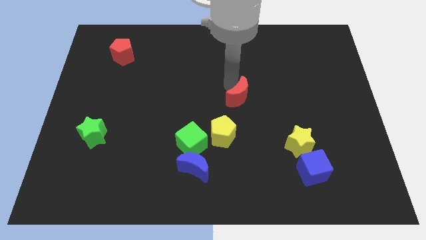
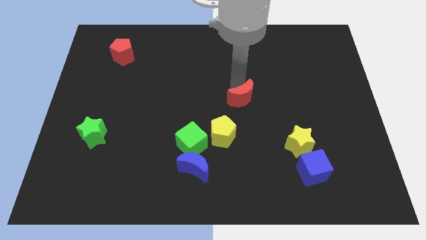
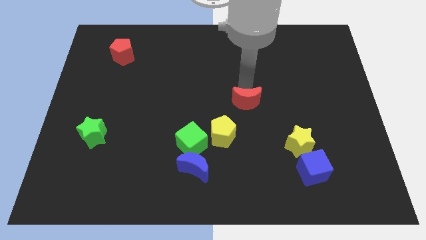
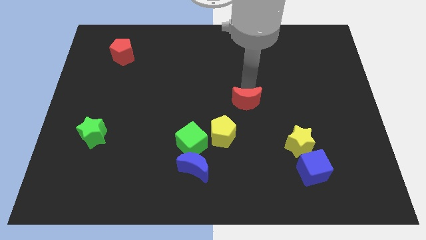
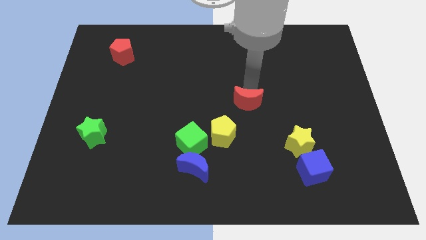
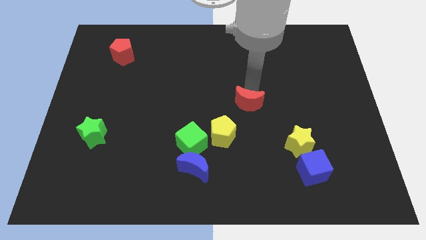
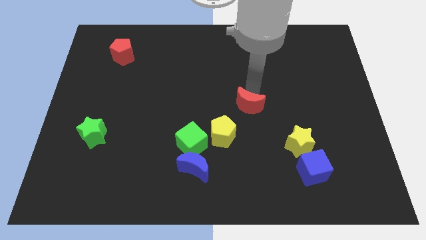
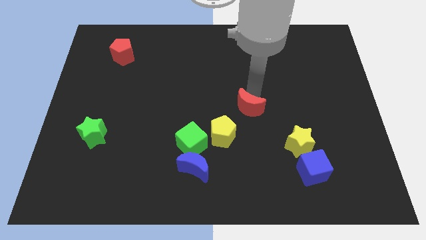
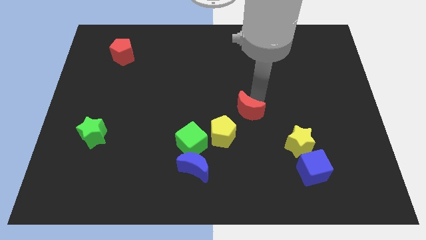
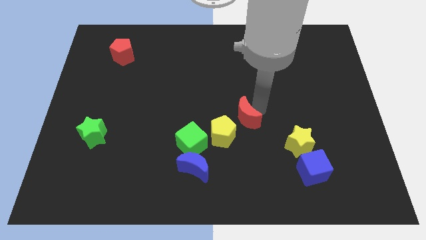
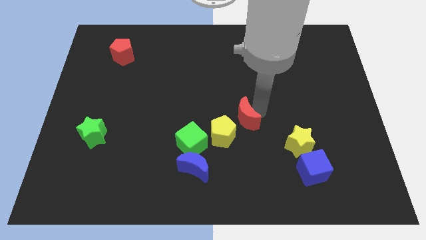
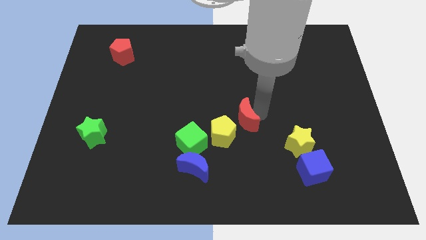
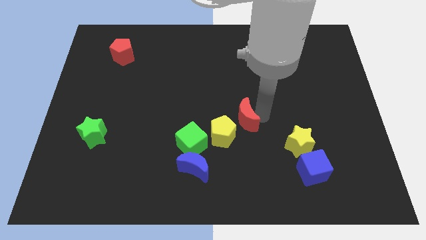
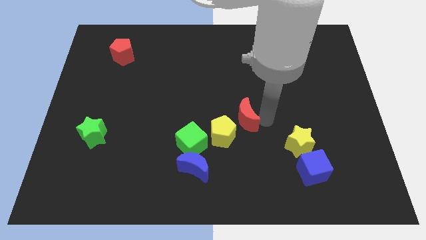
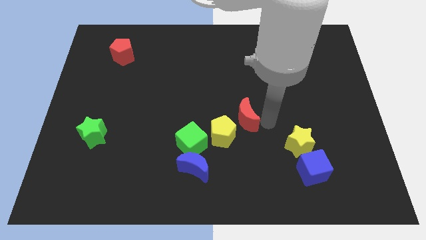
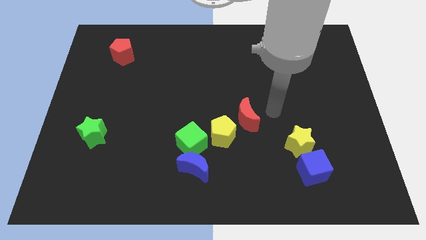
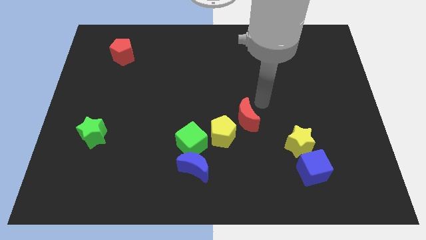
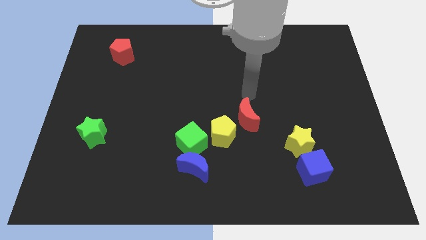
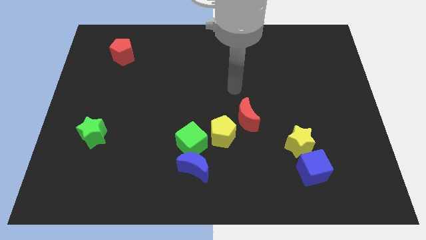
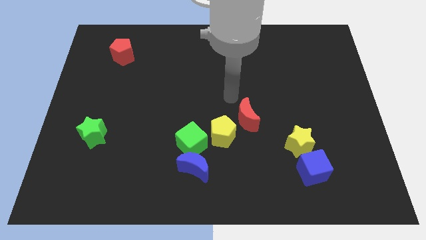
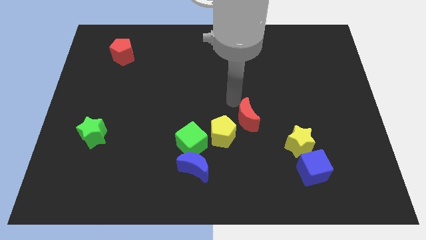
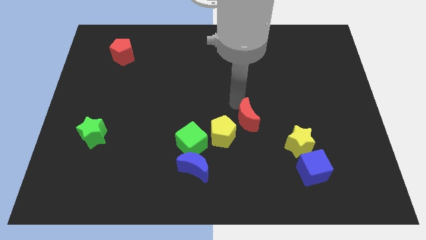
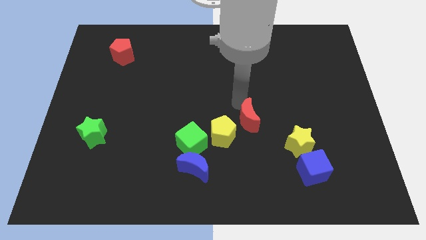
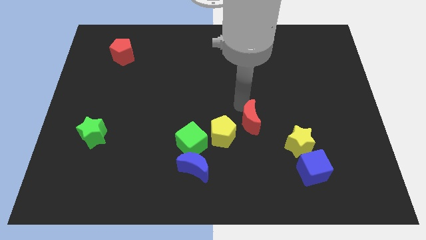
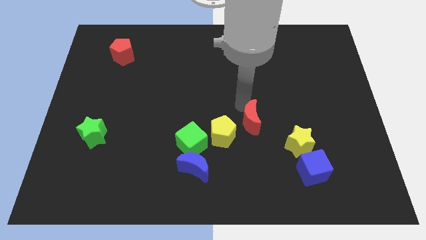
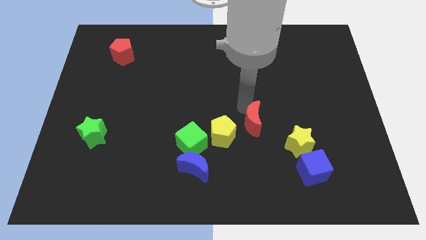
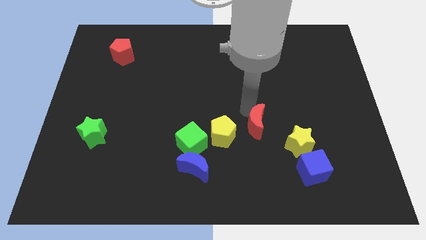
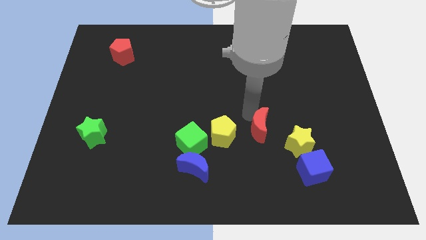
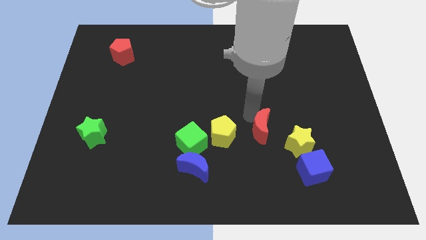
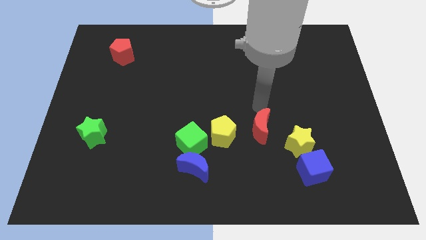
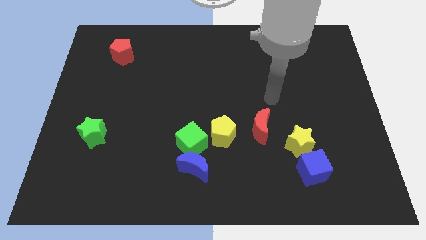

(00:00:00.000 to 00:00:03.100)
place the red moon between yellow blocks

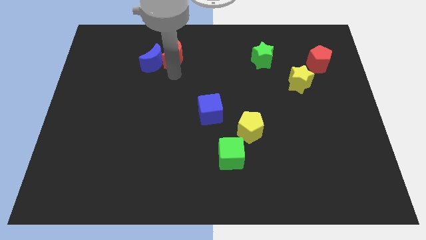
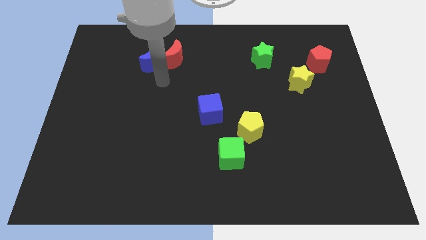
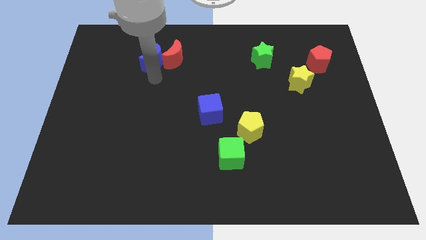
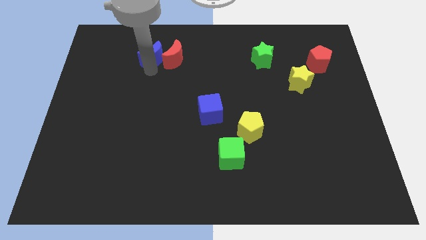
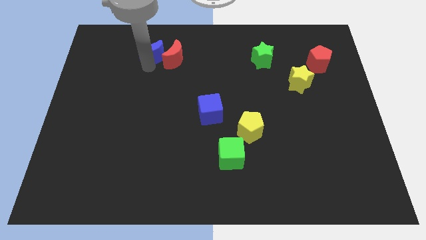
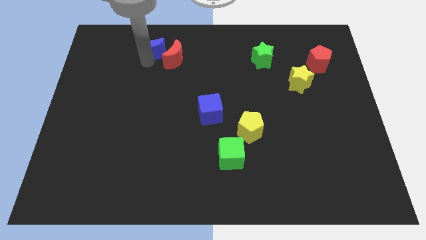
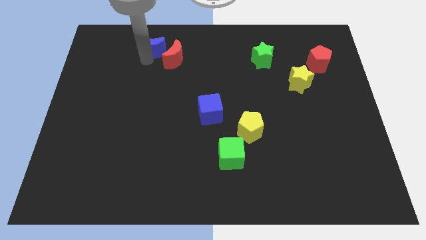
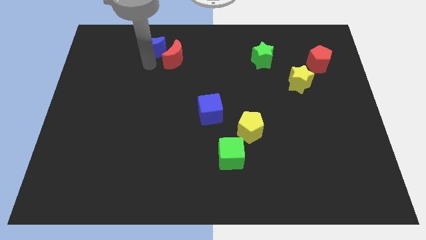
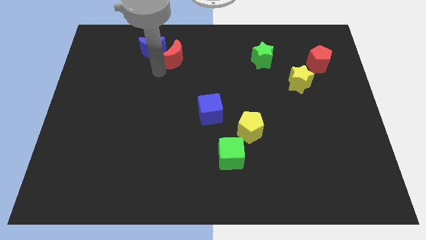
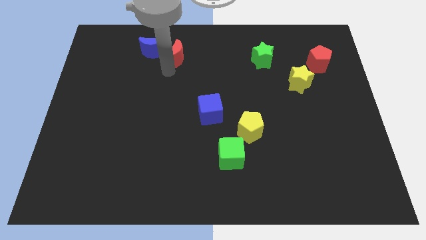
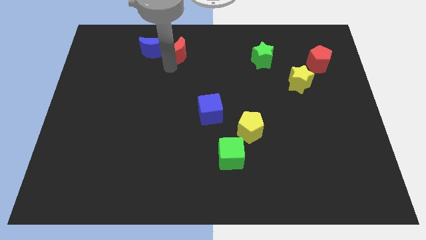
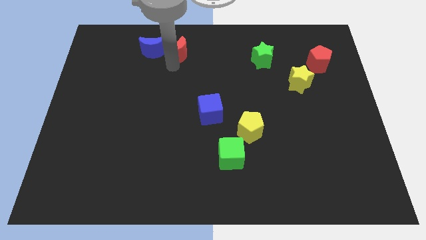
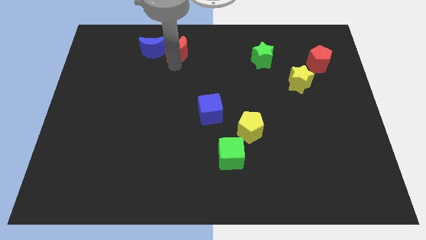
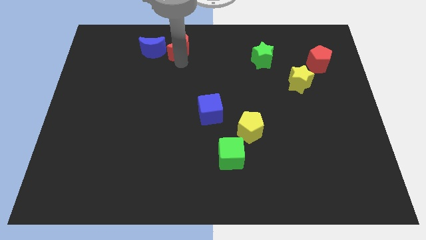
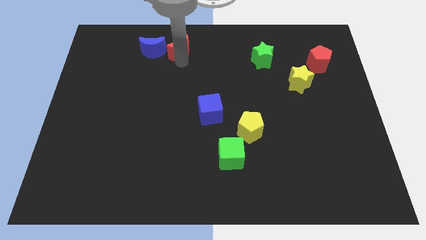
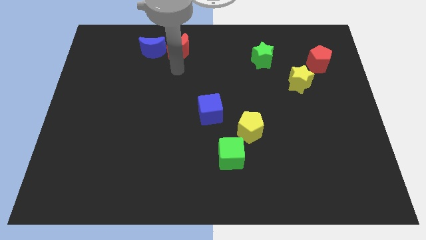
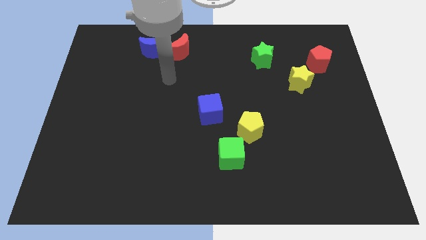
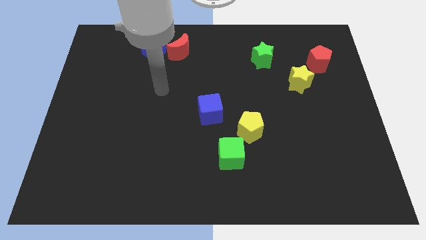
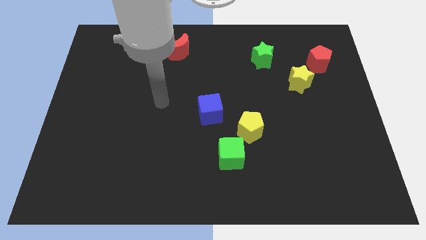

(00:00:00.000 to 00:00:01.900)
push the blue crescent towards the left top of the board

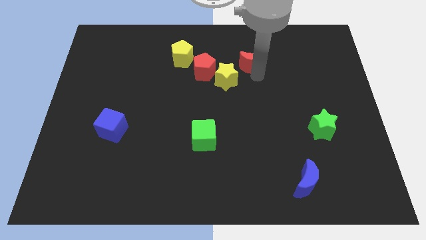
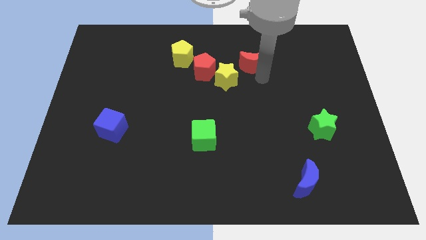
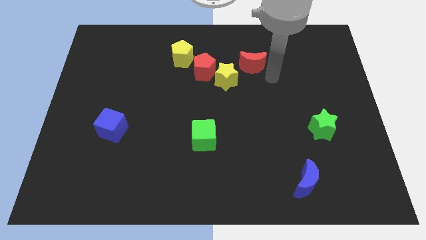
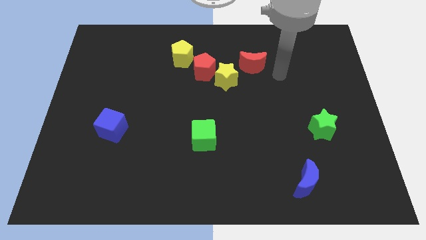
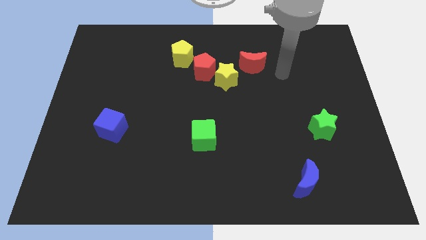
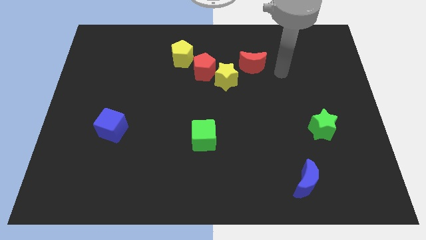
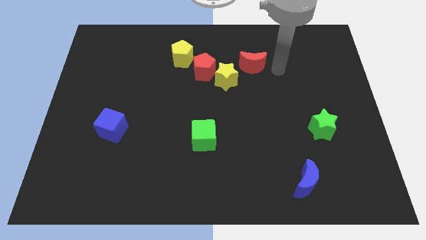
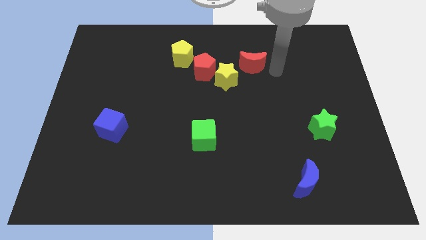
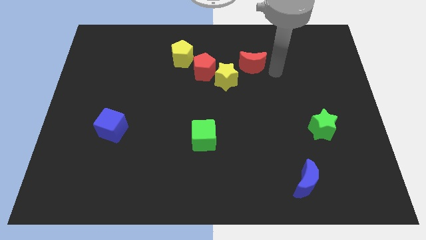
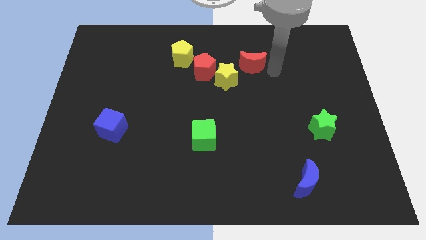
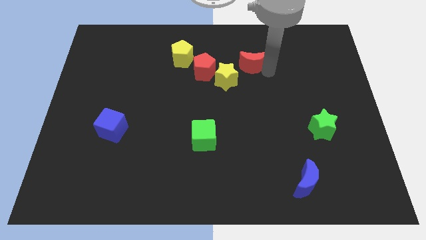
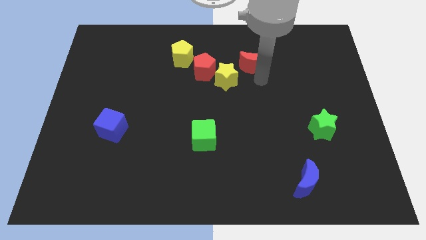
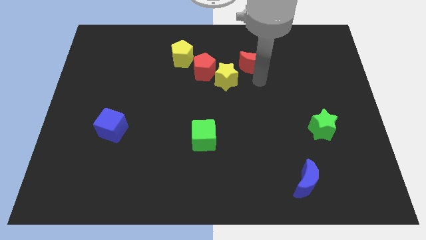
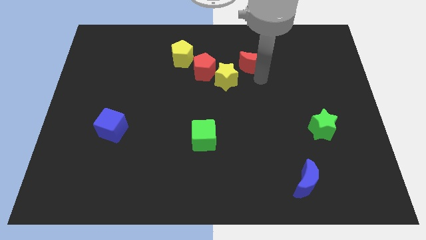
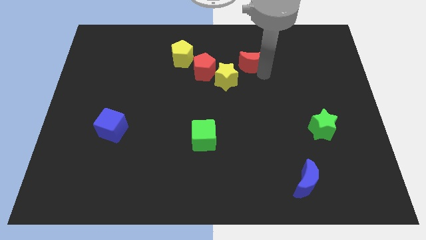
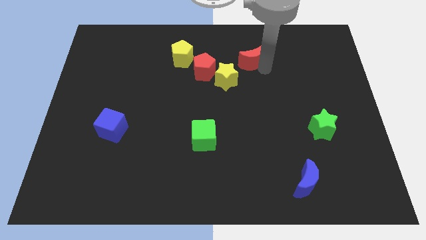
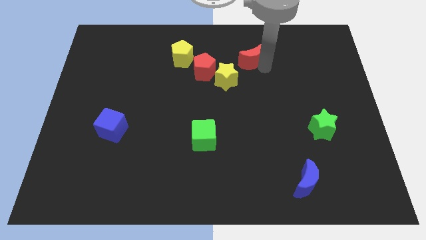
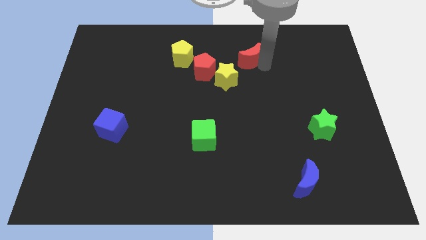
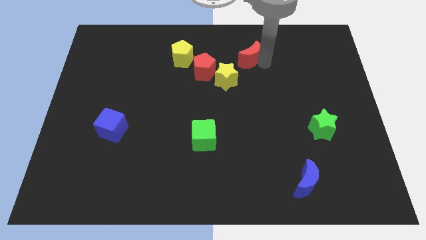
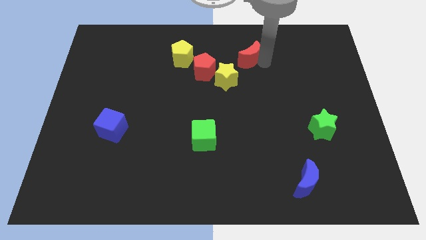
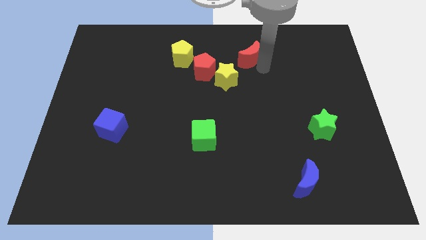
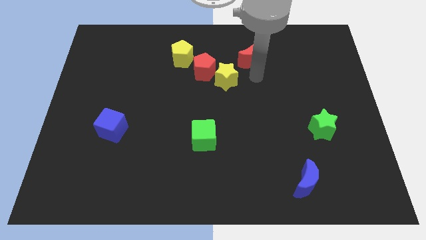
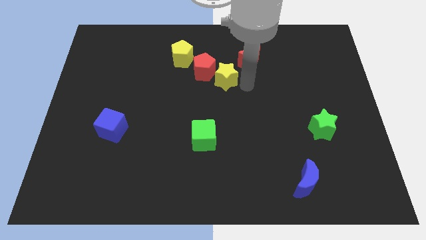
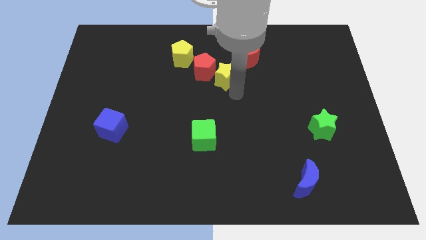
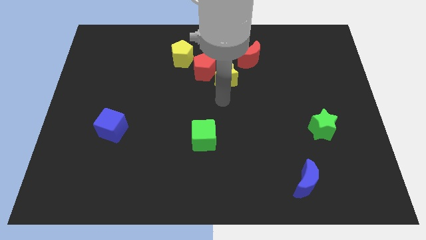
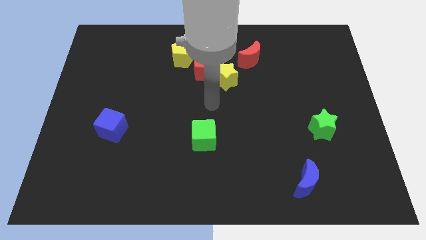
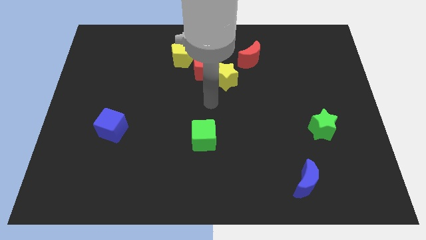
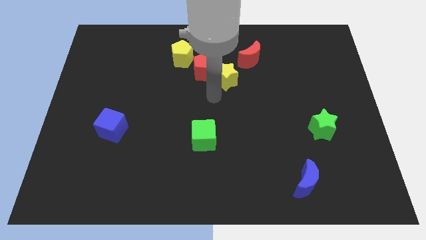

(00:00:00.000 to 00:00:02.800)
adjust the red crescent diagonally above yellow star

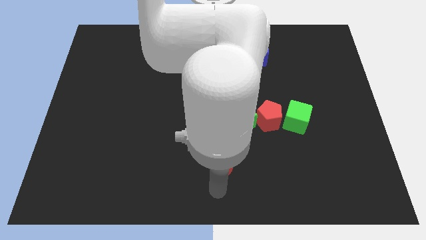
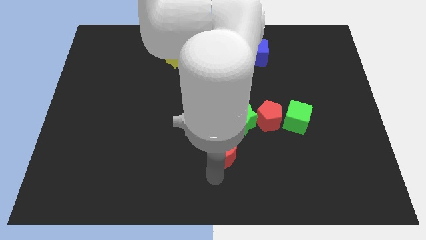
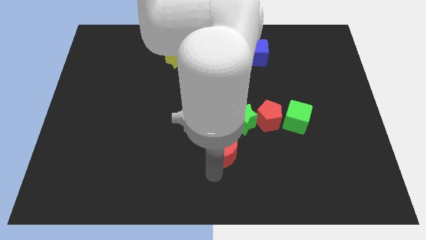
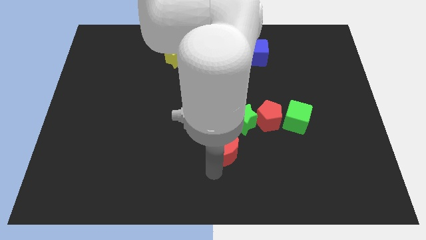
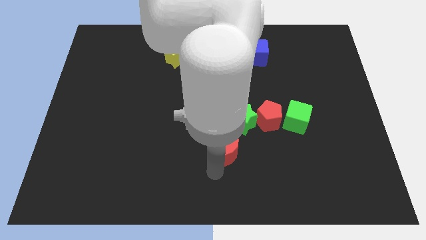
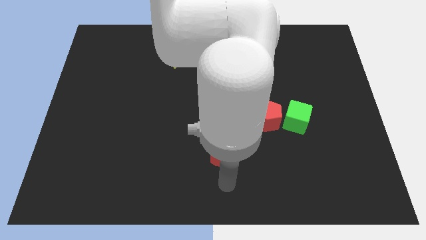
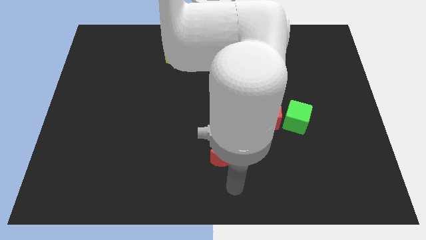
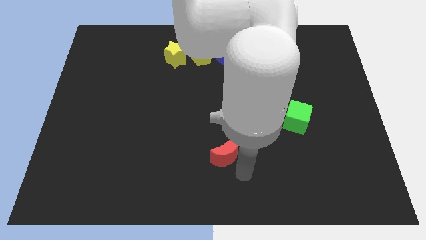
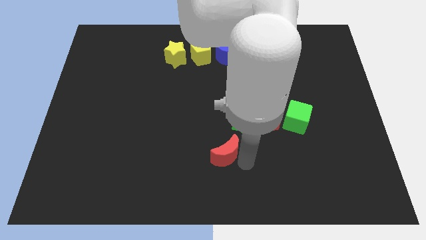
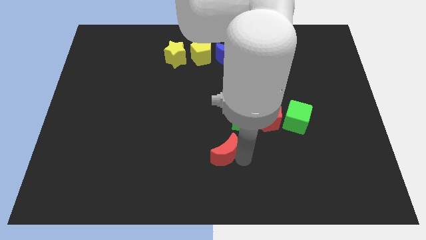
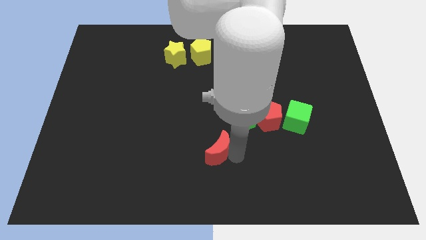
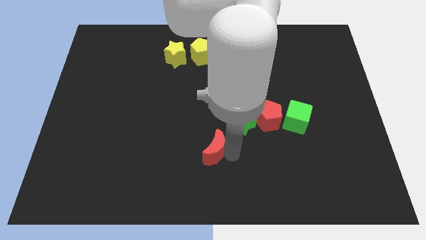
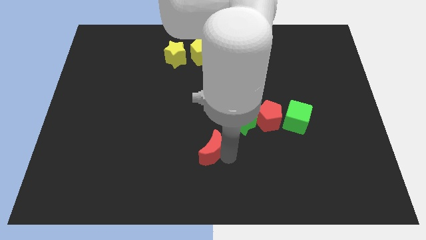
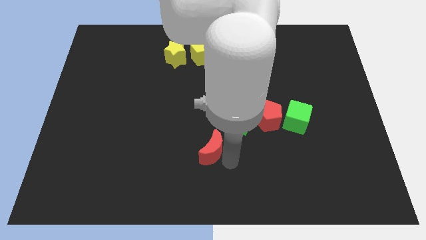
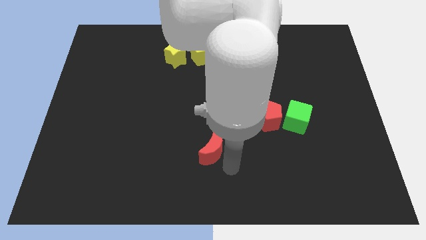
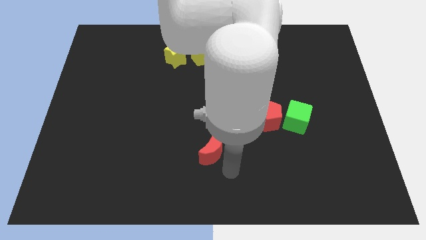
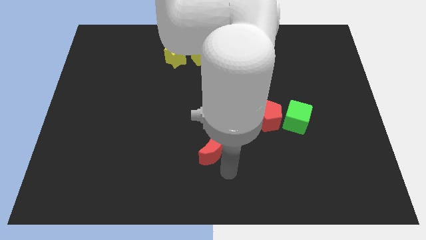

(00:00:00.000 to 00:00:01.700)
push the red moon towards the top side
